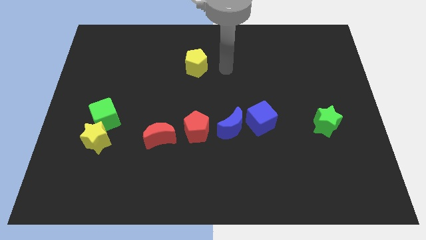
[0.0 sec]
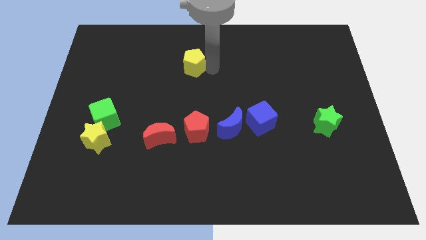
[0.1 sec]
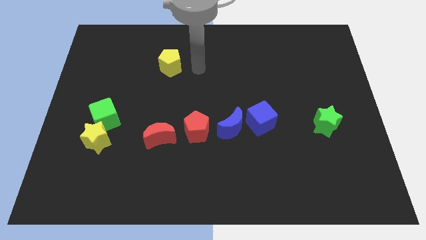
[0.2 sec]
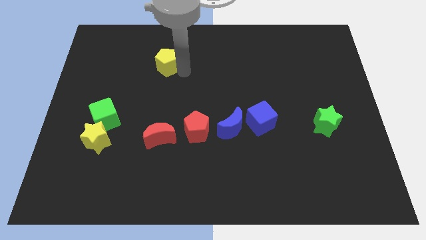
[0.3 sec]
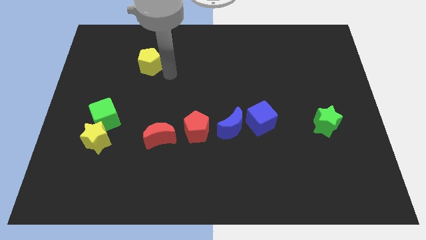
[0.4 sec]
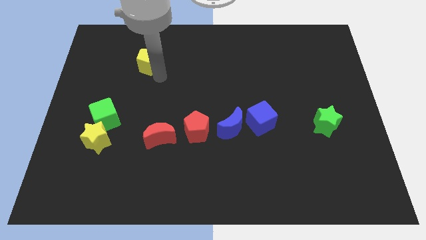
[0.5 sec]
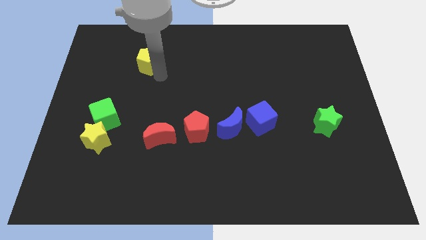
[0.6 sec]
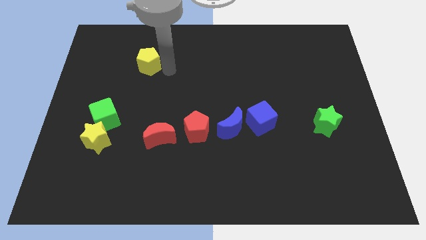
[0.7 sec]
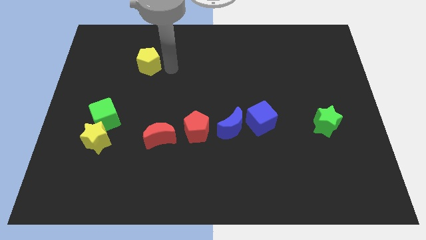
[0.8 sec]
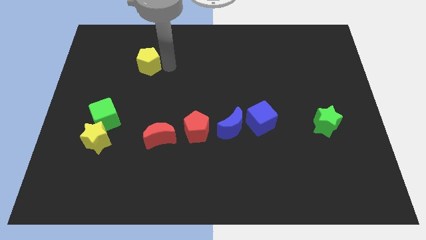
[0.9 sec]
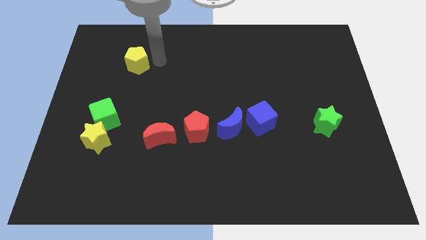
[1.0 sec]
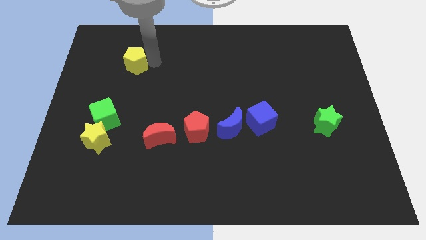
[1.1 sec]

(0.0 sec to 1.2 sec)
move the yellow pentagon slightly towards the left side

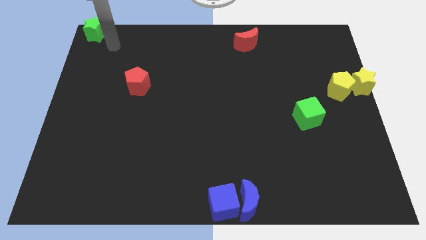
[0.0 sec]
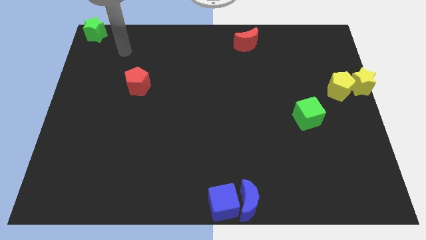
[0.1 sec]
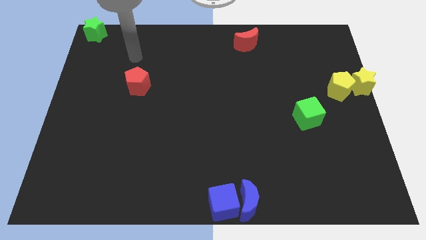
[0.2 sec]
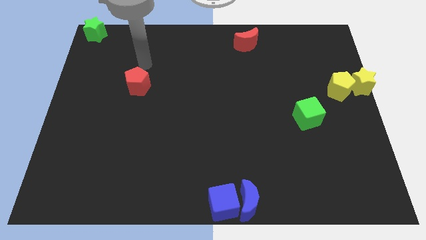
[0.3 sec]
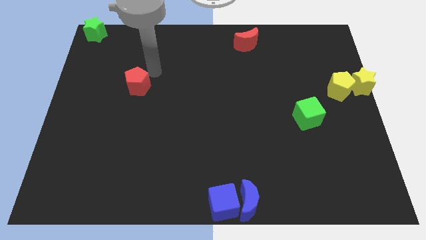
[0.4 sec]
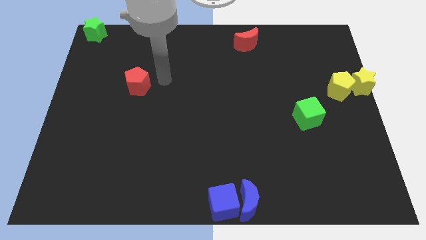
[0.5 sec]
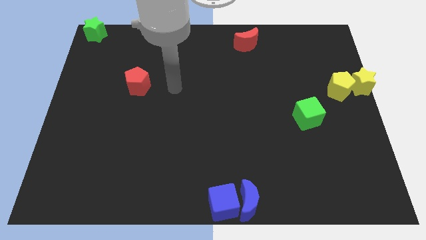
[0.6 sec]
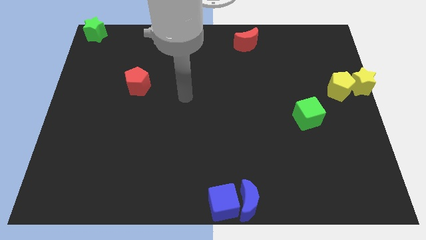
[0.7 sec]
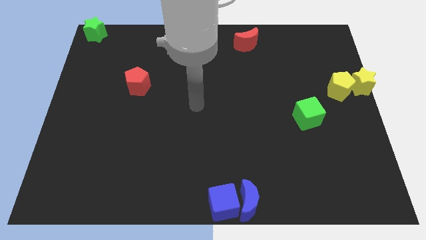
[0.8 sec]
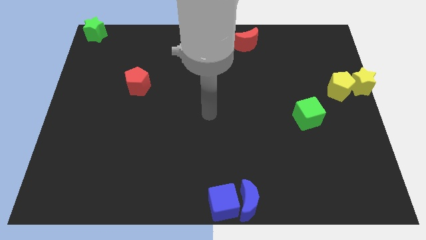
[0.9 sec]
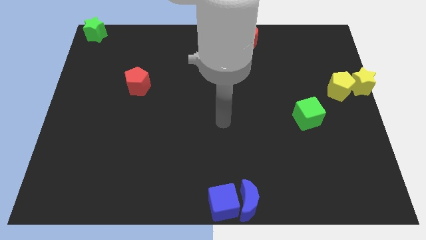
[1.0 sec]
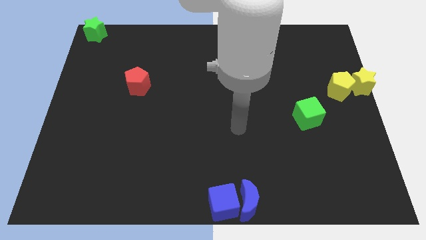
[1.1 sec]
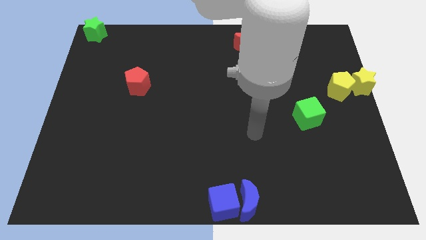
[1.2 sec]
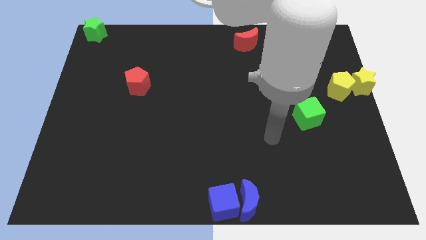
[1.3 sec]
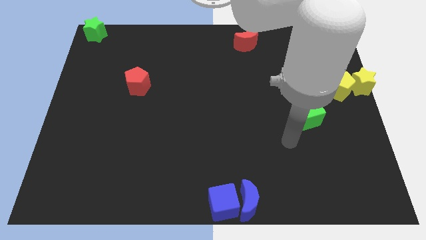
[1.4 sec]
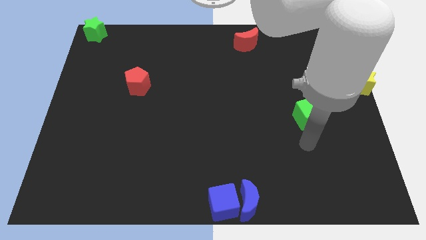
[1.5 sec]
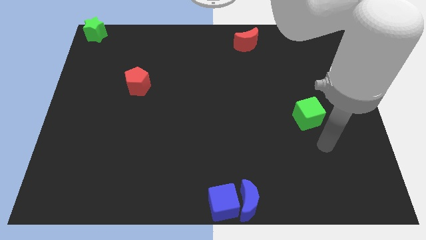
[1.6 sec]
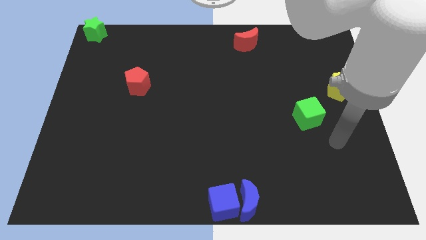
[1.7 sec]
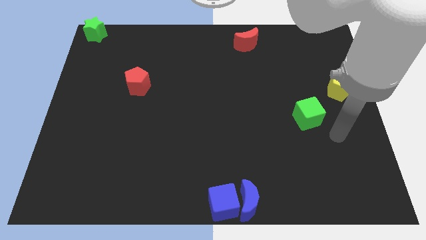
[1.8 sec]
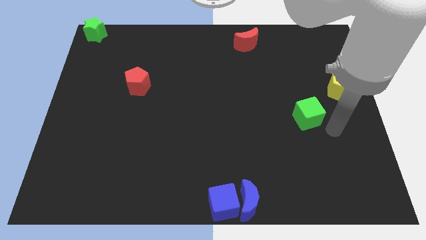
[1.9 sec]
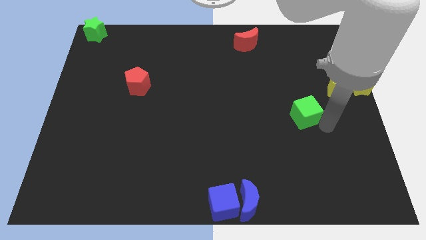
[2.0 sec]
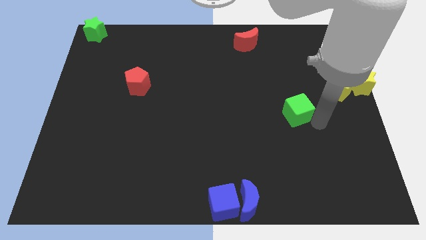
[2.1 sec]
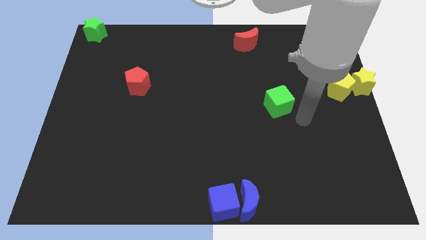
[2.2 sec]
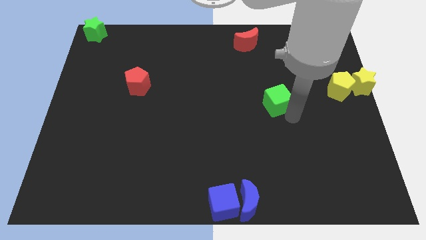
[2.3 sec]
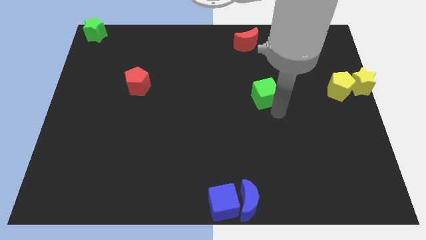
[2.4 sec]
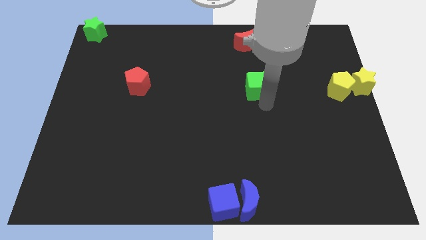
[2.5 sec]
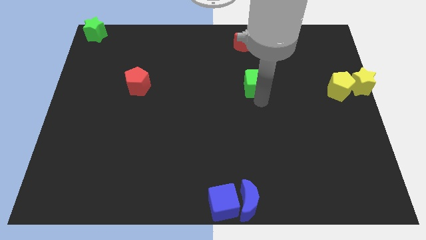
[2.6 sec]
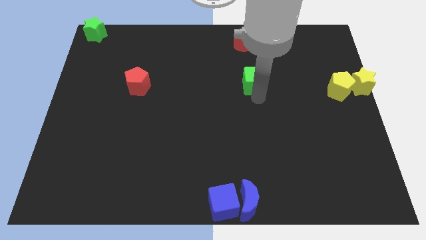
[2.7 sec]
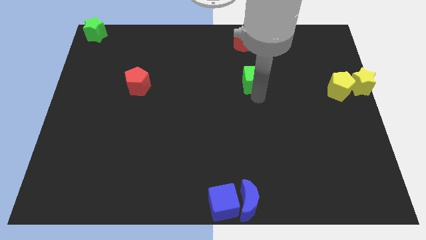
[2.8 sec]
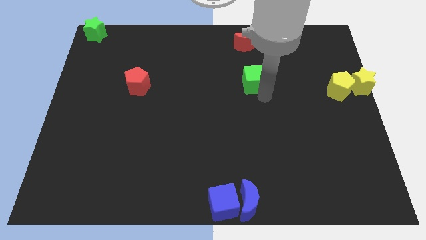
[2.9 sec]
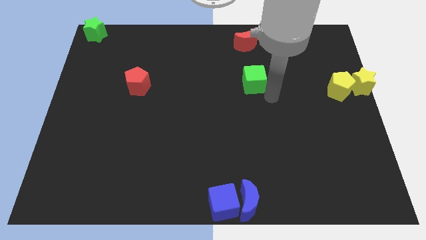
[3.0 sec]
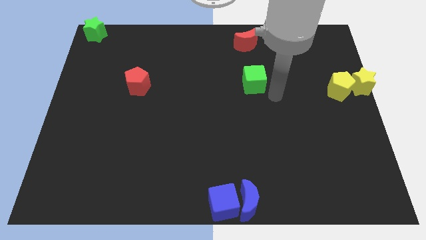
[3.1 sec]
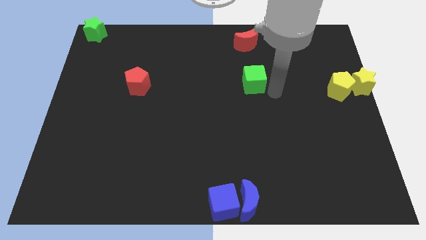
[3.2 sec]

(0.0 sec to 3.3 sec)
place the green cube to the bottom of the red crescent

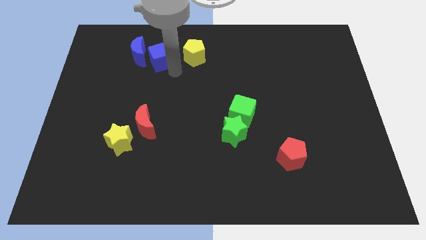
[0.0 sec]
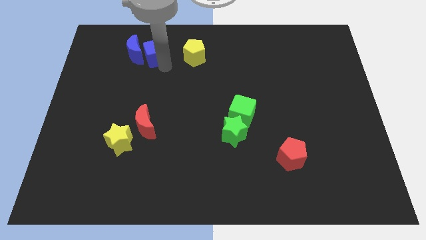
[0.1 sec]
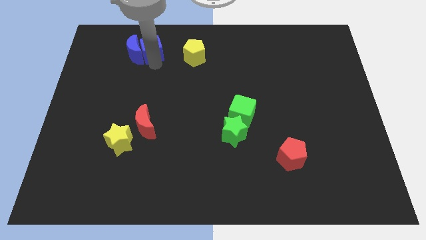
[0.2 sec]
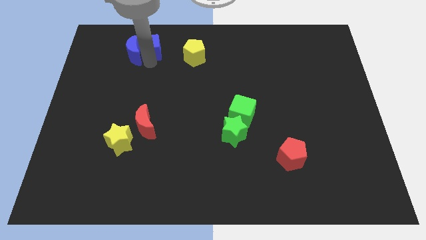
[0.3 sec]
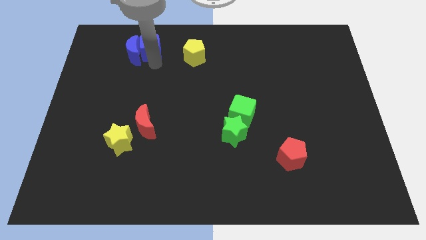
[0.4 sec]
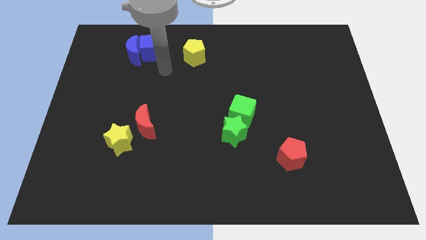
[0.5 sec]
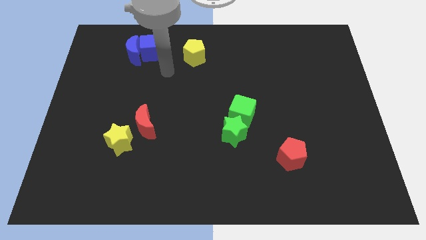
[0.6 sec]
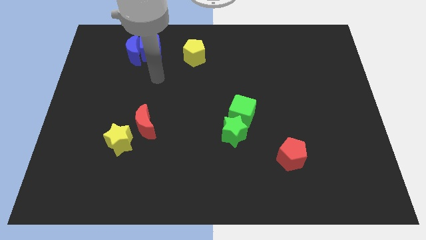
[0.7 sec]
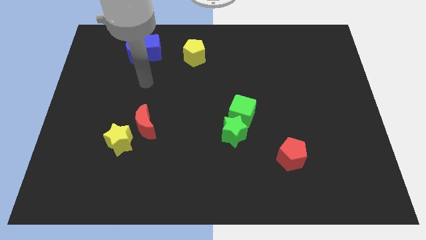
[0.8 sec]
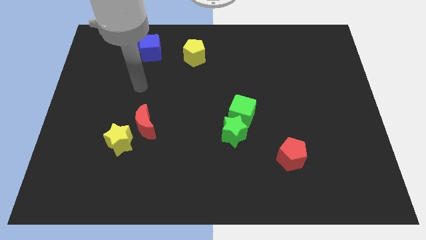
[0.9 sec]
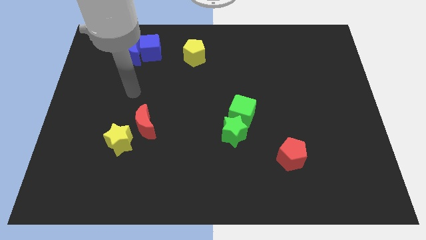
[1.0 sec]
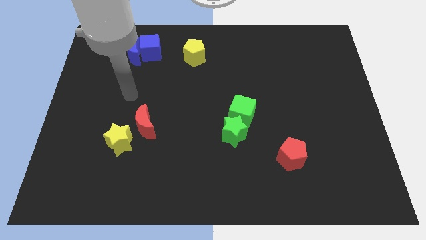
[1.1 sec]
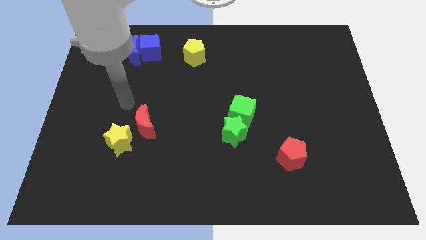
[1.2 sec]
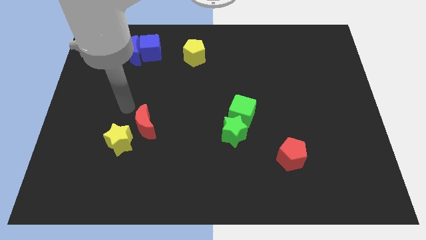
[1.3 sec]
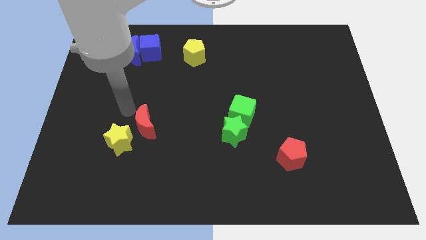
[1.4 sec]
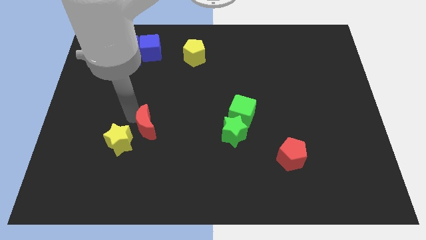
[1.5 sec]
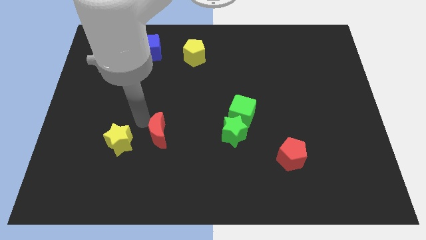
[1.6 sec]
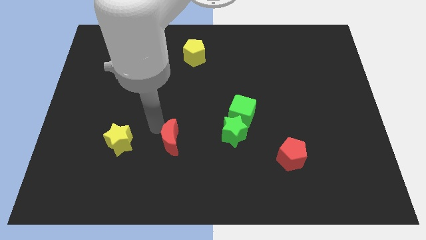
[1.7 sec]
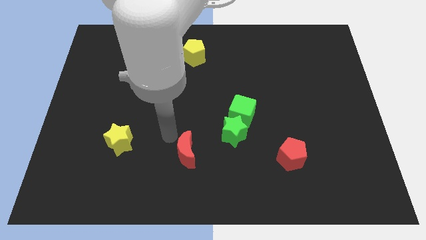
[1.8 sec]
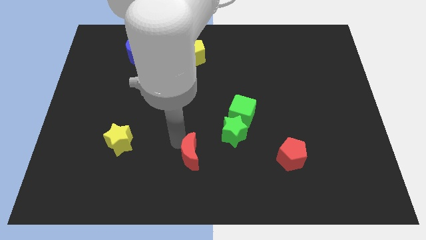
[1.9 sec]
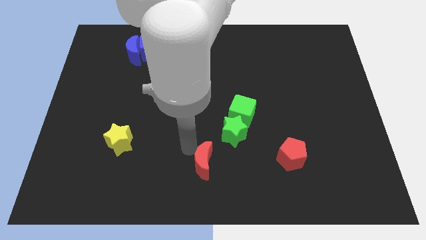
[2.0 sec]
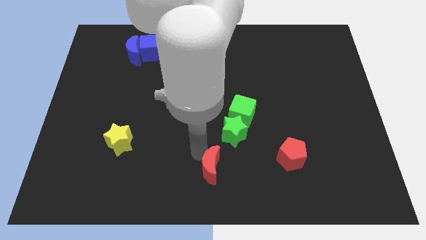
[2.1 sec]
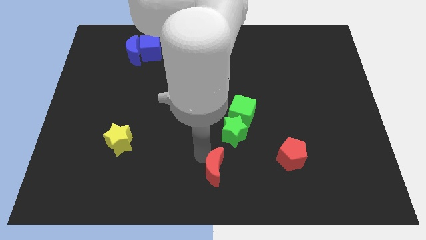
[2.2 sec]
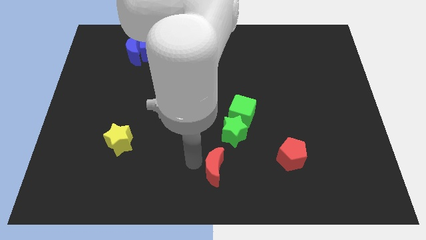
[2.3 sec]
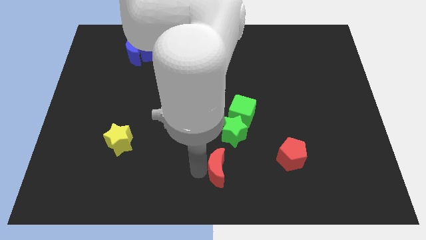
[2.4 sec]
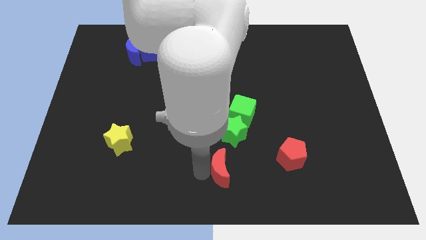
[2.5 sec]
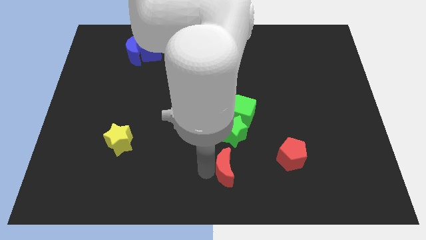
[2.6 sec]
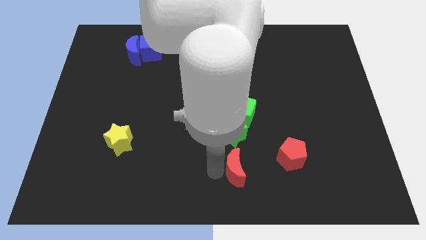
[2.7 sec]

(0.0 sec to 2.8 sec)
slide the red moon below the green star

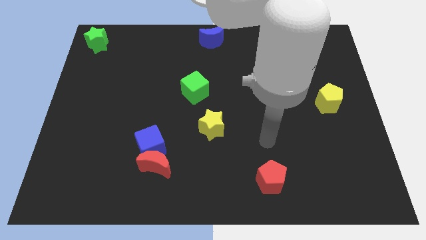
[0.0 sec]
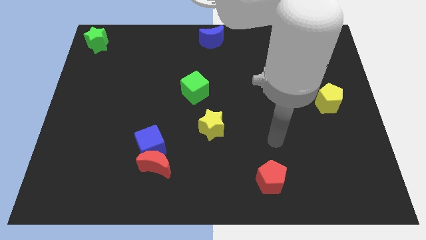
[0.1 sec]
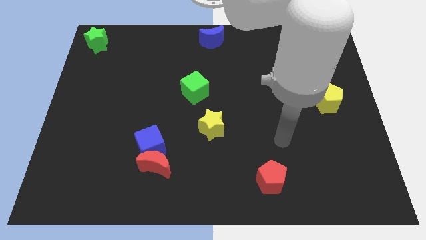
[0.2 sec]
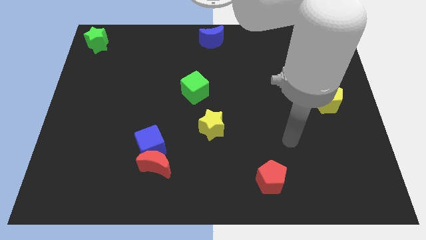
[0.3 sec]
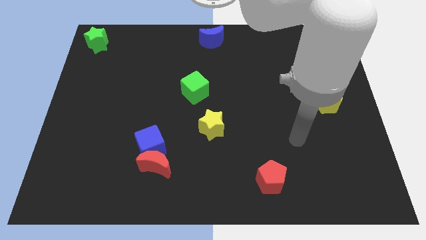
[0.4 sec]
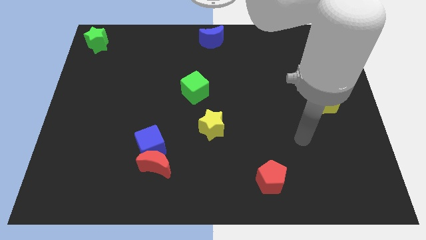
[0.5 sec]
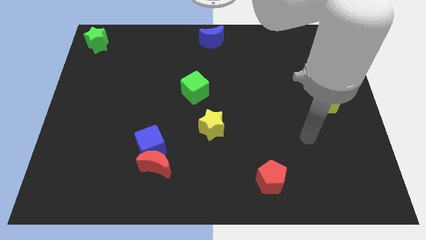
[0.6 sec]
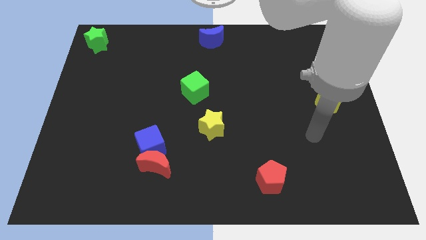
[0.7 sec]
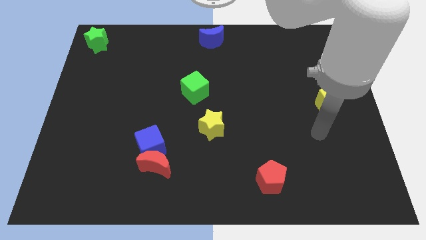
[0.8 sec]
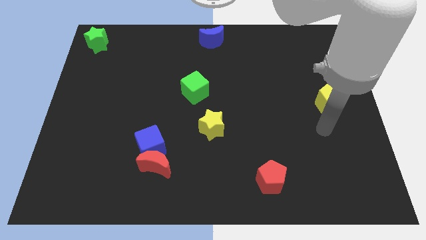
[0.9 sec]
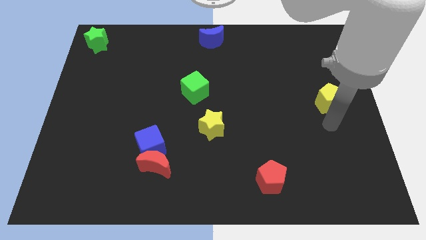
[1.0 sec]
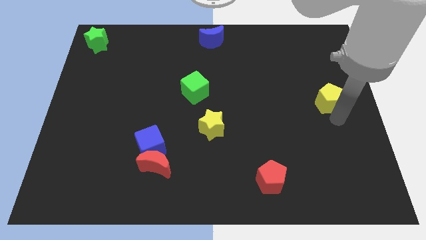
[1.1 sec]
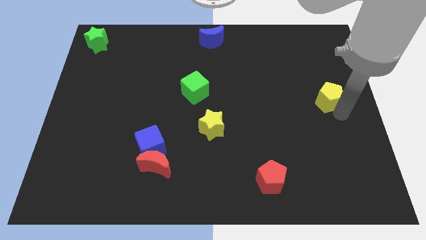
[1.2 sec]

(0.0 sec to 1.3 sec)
move the arm under the yellow pentagon

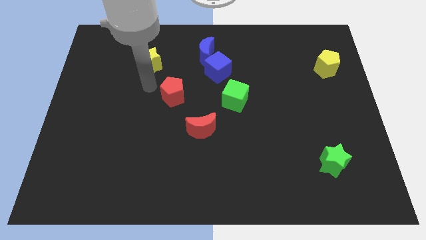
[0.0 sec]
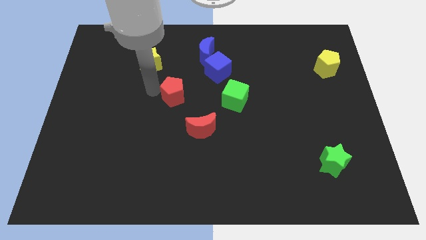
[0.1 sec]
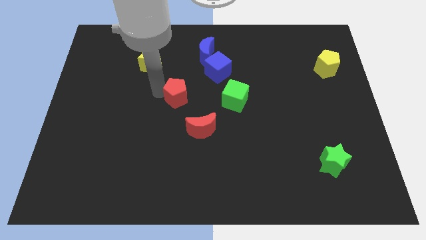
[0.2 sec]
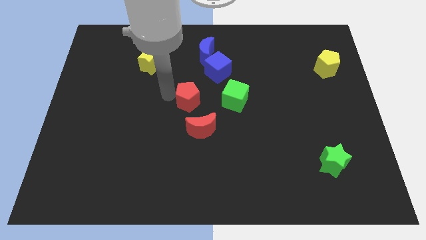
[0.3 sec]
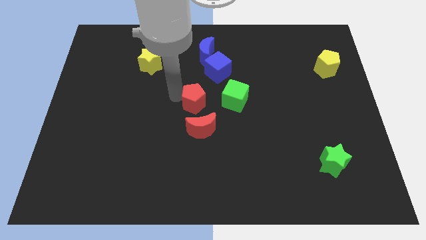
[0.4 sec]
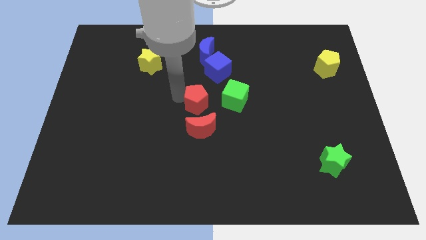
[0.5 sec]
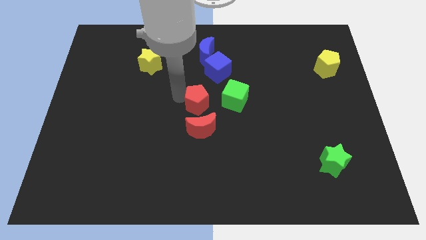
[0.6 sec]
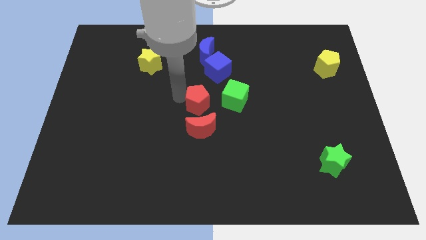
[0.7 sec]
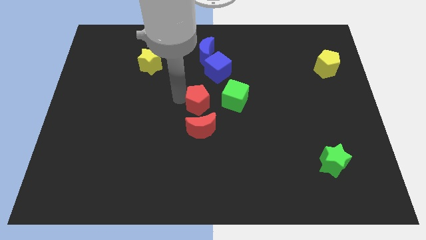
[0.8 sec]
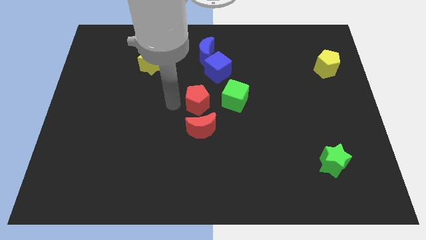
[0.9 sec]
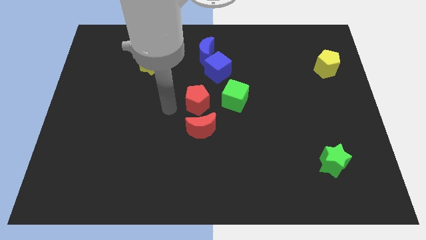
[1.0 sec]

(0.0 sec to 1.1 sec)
place red pentagon on top of red moon
